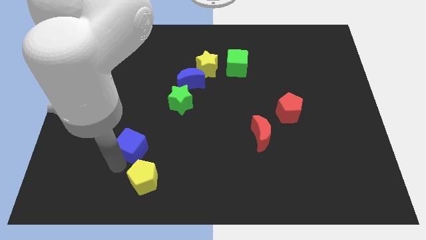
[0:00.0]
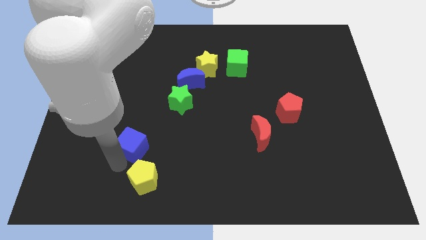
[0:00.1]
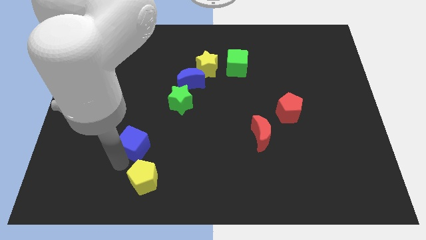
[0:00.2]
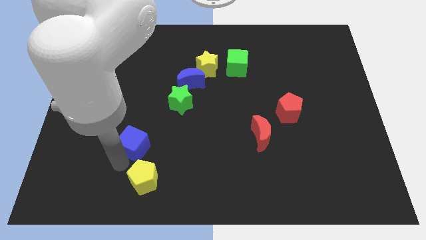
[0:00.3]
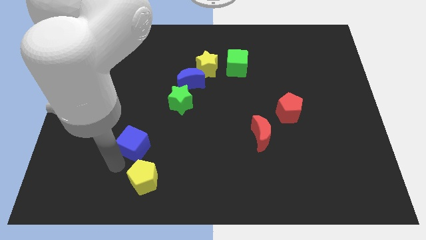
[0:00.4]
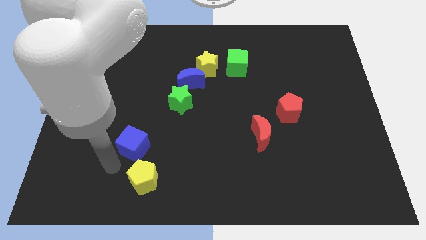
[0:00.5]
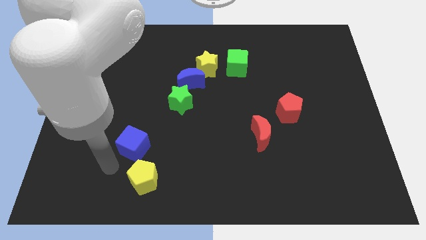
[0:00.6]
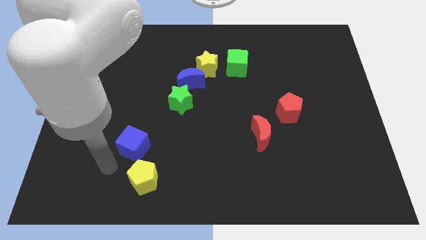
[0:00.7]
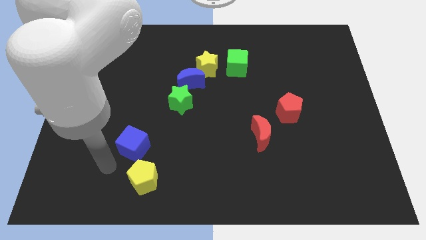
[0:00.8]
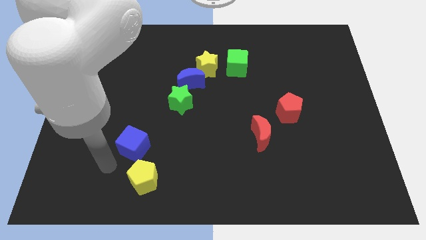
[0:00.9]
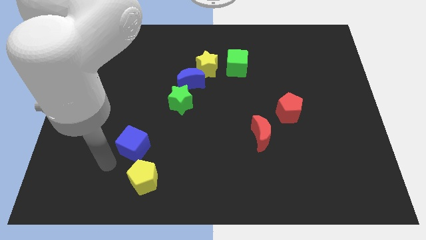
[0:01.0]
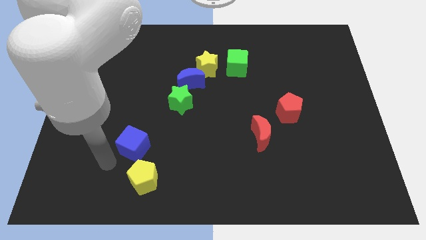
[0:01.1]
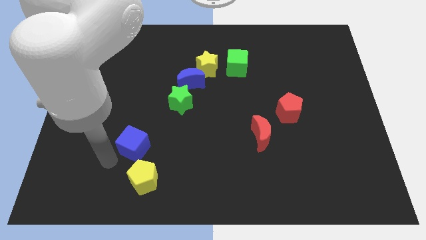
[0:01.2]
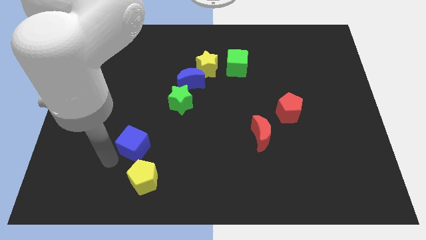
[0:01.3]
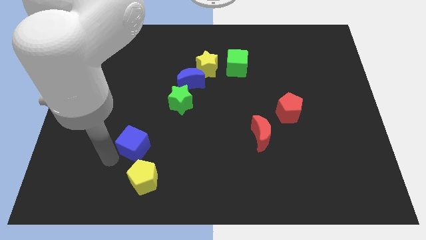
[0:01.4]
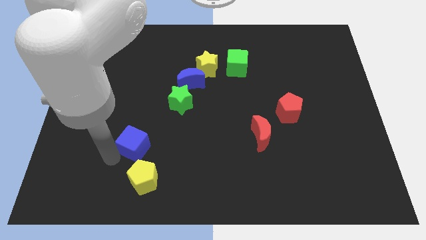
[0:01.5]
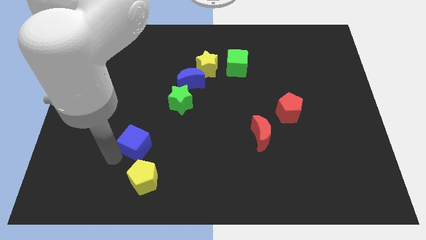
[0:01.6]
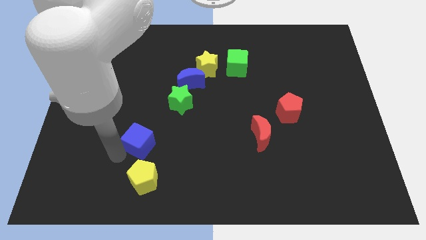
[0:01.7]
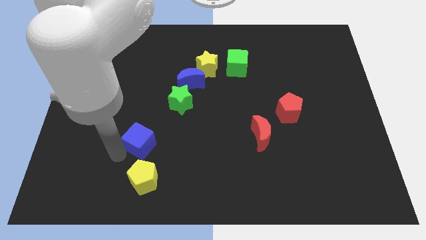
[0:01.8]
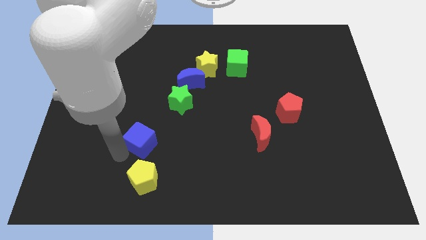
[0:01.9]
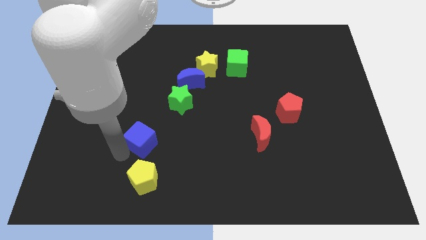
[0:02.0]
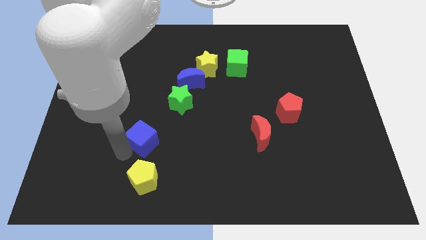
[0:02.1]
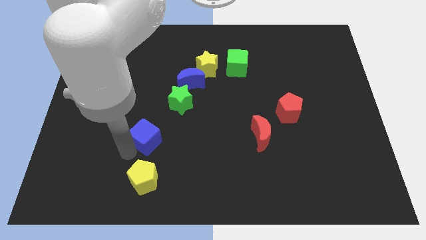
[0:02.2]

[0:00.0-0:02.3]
place the blue cube to the top side of the yellow pentagon

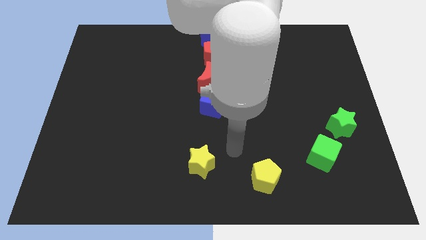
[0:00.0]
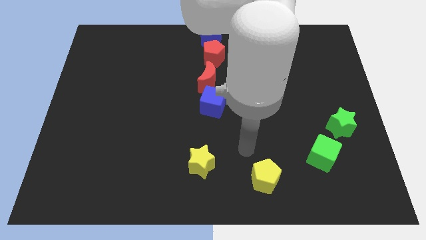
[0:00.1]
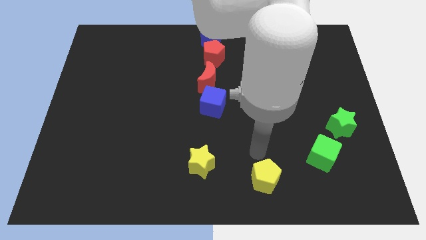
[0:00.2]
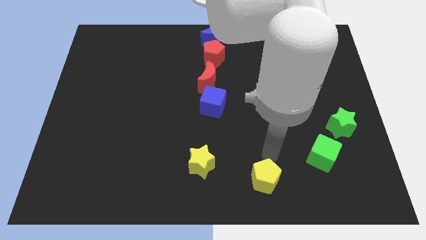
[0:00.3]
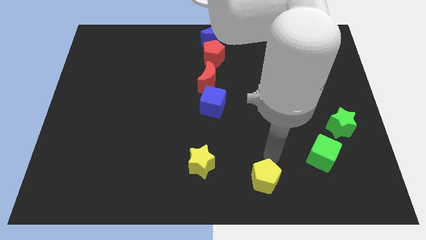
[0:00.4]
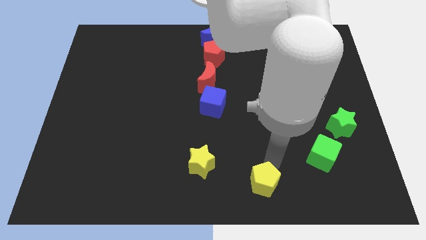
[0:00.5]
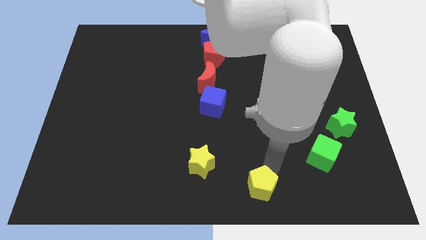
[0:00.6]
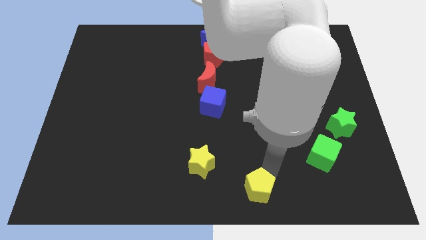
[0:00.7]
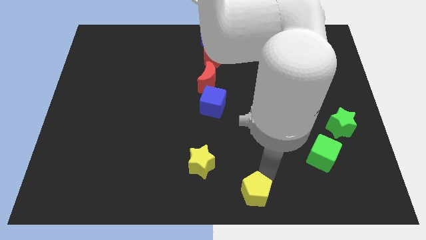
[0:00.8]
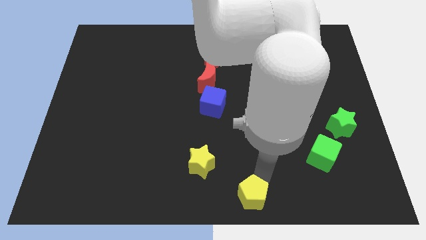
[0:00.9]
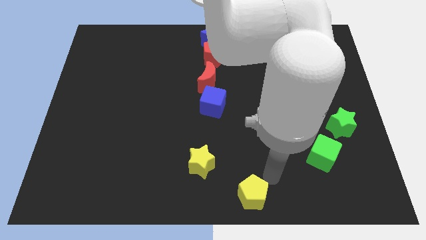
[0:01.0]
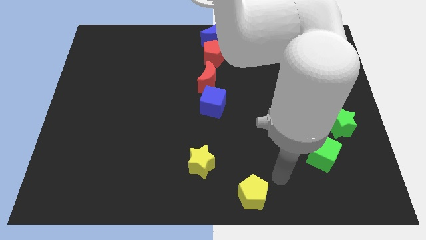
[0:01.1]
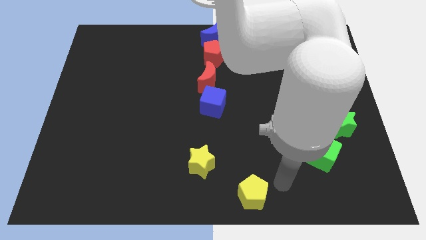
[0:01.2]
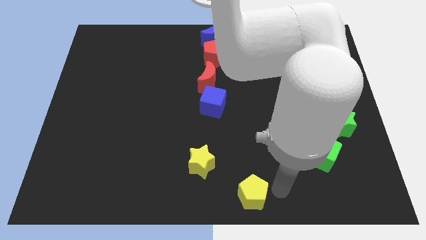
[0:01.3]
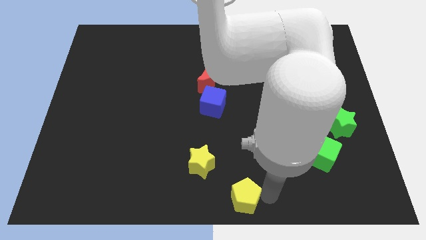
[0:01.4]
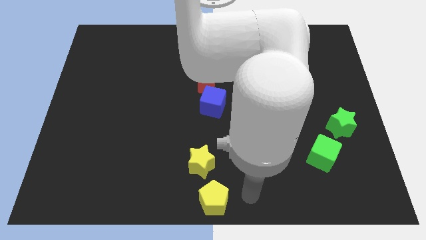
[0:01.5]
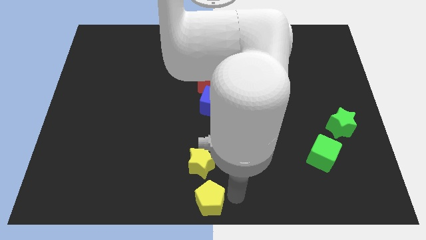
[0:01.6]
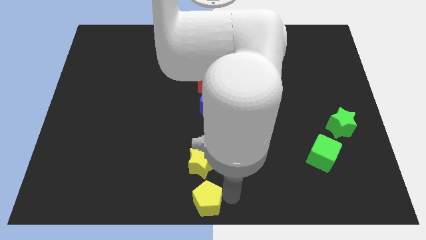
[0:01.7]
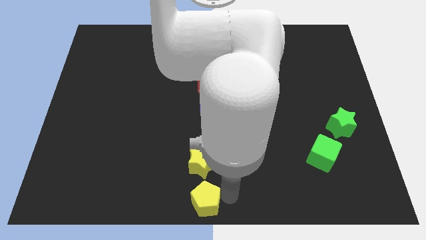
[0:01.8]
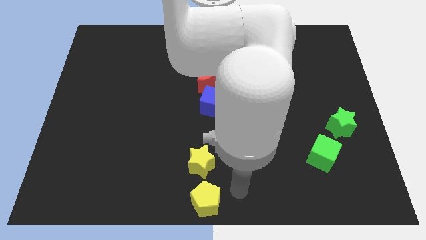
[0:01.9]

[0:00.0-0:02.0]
place the yellow pentagon below the yellow star

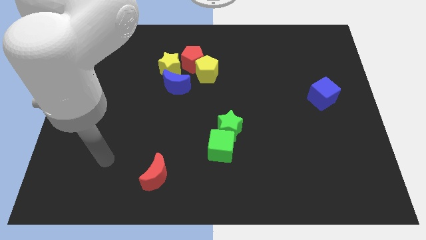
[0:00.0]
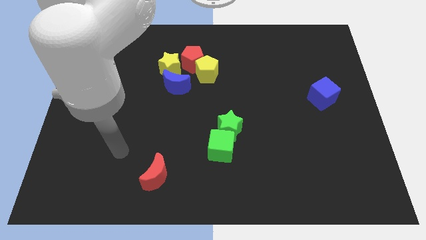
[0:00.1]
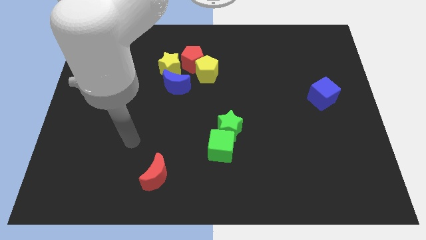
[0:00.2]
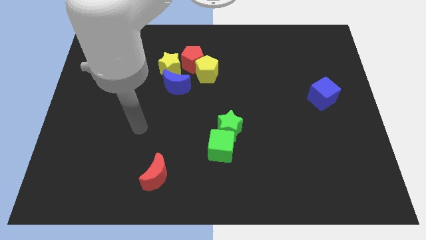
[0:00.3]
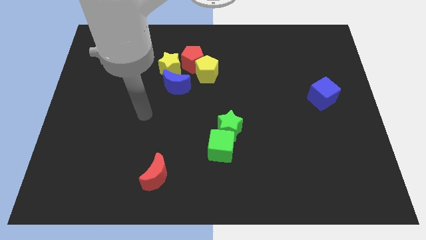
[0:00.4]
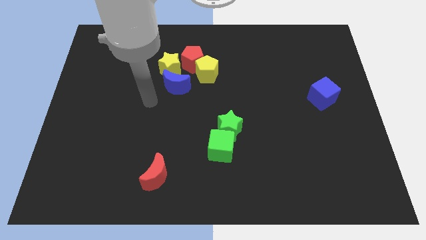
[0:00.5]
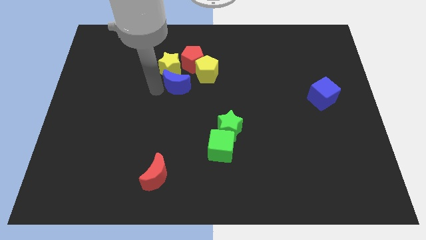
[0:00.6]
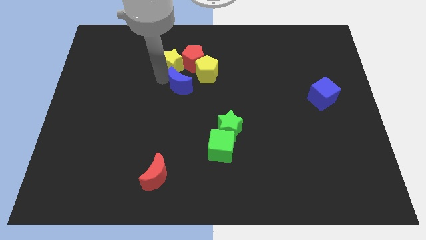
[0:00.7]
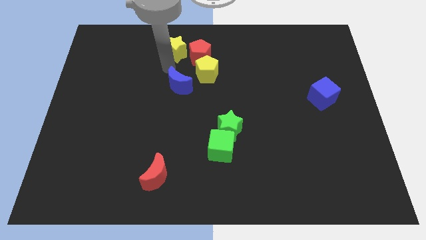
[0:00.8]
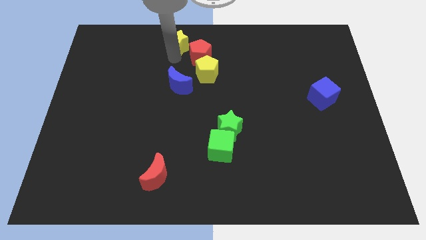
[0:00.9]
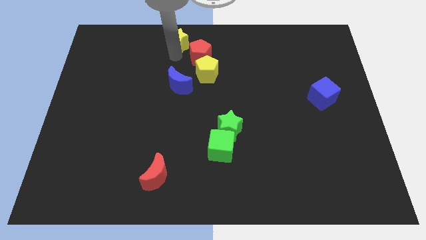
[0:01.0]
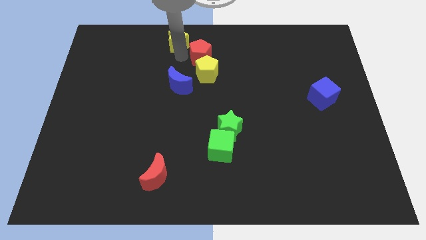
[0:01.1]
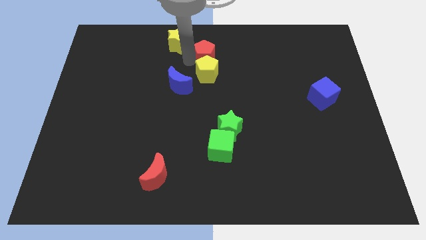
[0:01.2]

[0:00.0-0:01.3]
move the yellow star away from the blue crescent

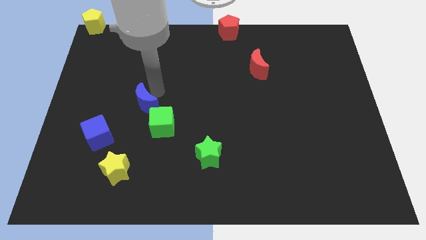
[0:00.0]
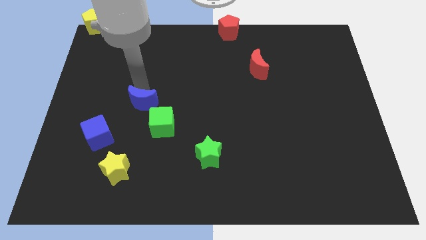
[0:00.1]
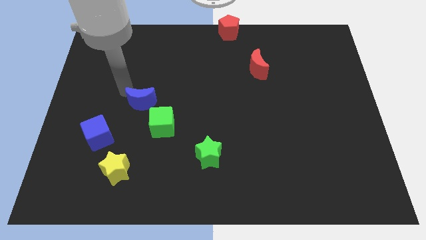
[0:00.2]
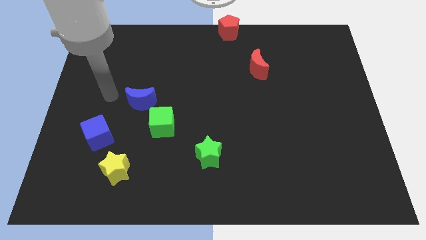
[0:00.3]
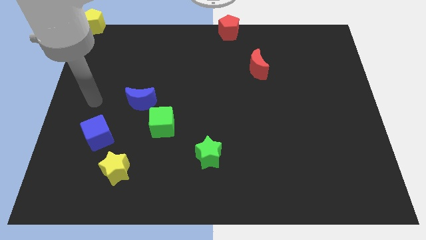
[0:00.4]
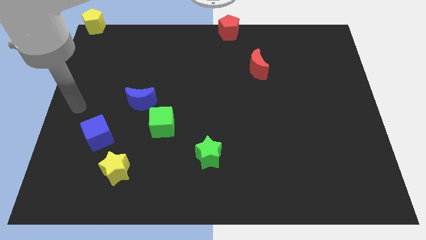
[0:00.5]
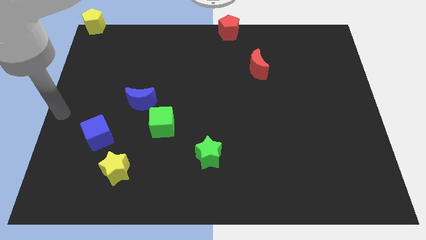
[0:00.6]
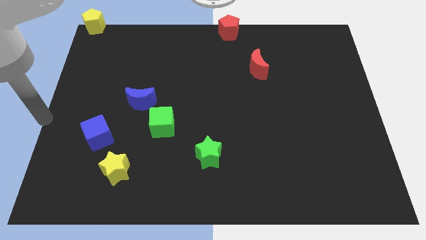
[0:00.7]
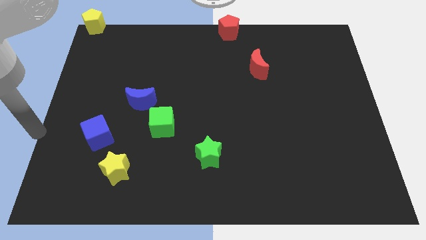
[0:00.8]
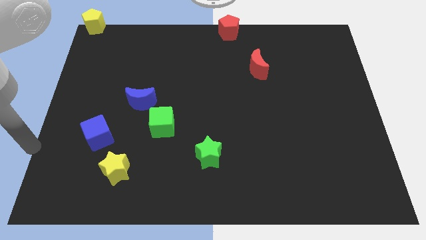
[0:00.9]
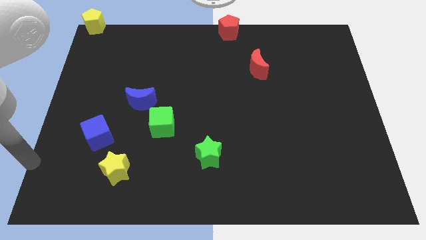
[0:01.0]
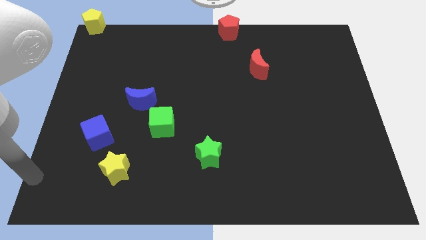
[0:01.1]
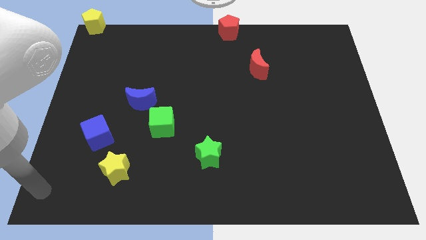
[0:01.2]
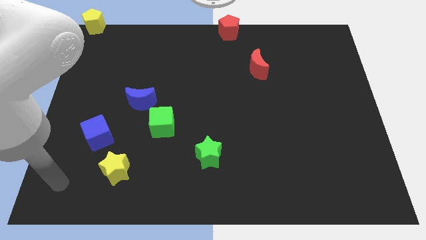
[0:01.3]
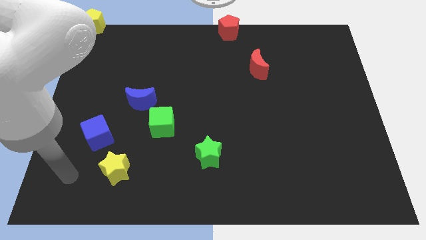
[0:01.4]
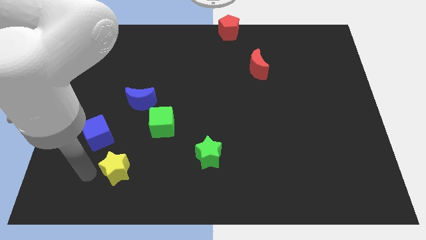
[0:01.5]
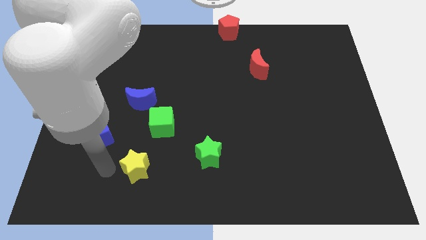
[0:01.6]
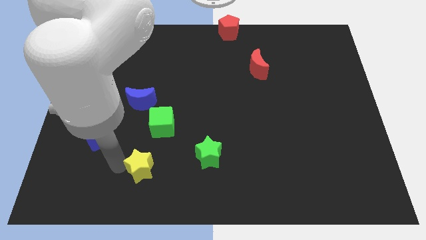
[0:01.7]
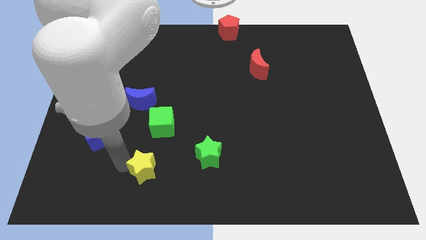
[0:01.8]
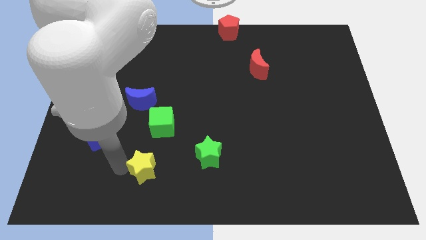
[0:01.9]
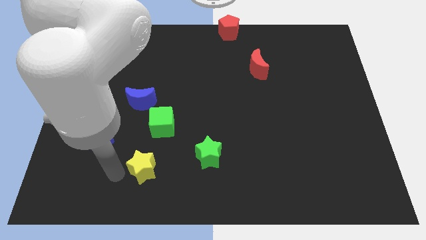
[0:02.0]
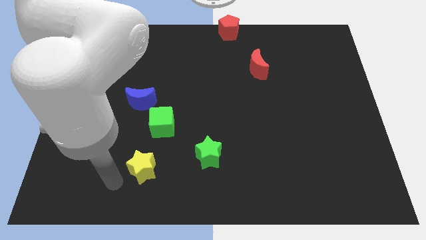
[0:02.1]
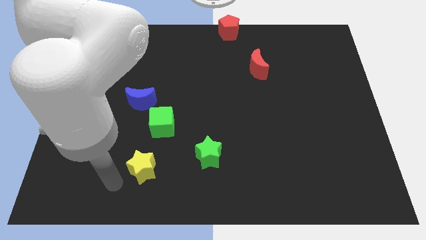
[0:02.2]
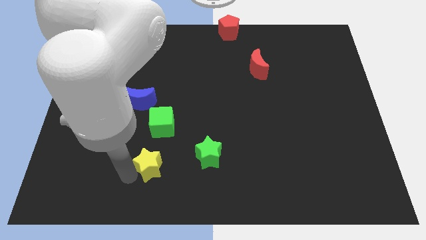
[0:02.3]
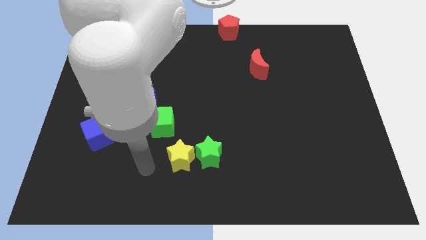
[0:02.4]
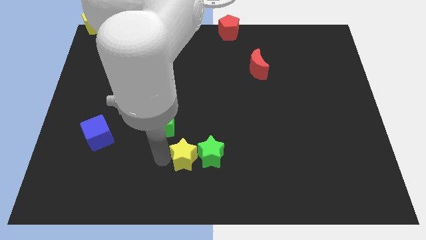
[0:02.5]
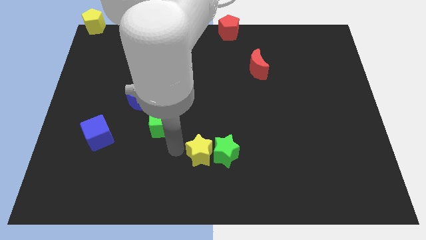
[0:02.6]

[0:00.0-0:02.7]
push the yellow star left to the green star

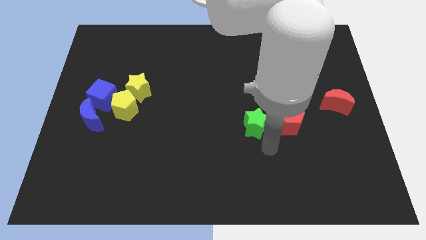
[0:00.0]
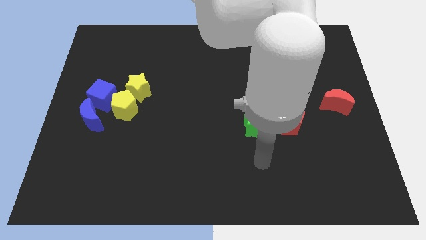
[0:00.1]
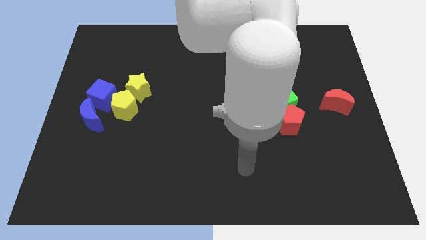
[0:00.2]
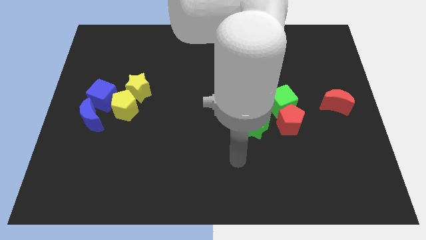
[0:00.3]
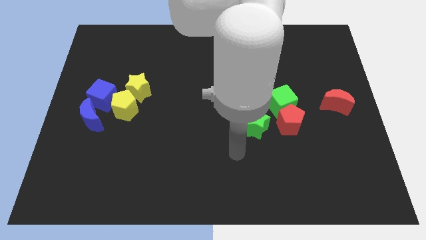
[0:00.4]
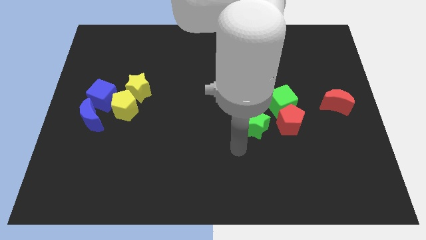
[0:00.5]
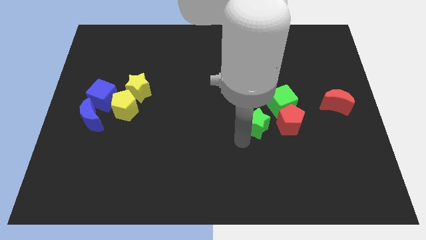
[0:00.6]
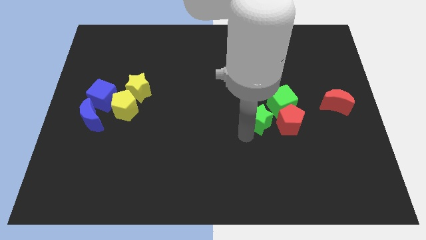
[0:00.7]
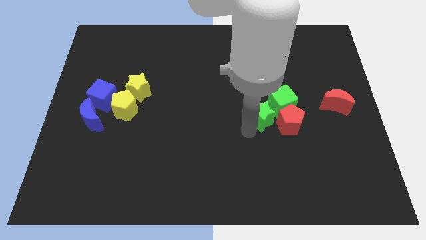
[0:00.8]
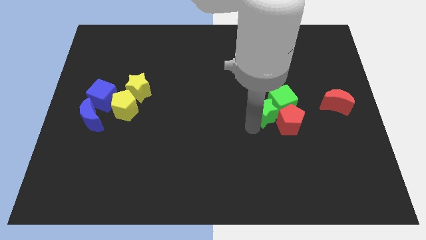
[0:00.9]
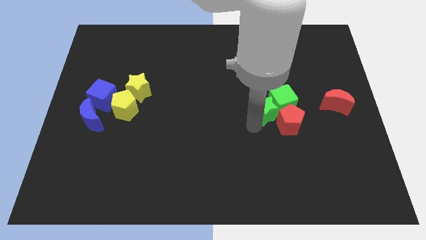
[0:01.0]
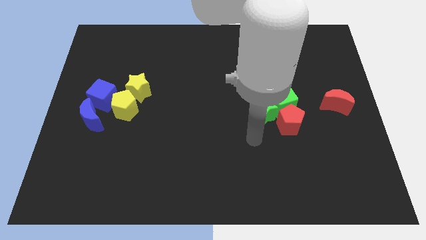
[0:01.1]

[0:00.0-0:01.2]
push the green star into green cube
